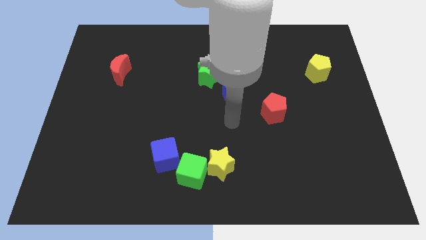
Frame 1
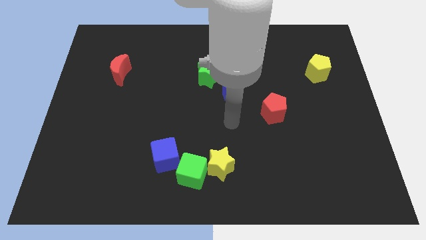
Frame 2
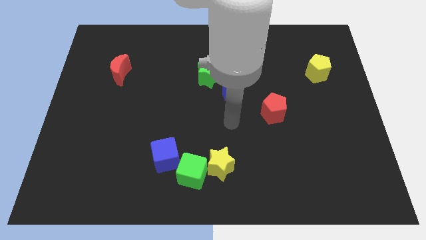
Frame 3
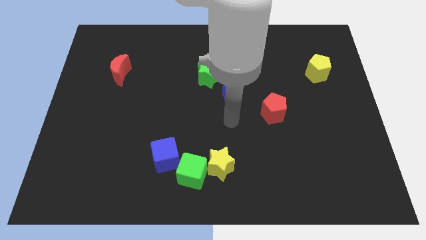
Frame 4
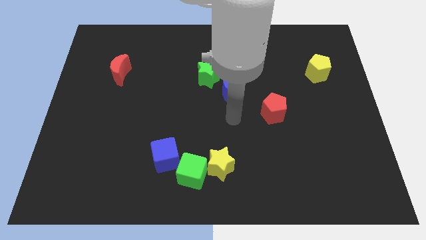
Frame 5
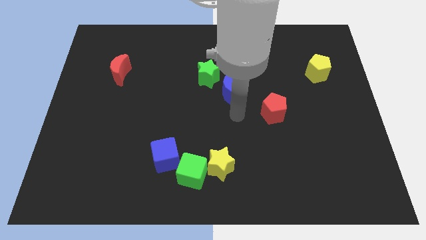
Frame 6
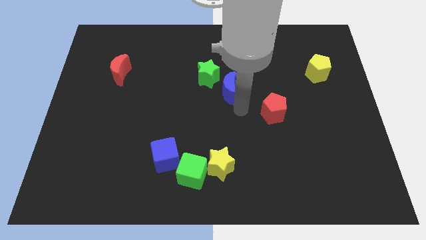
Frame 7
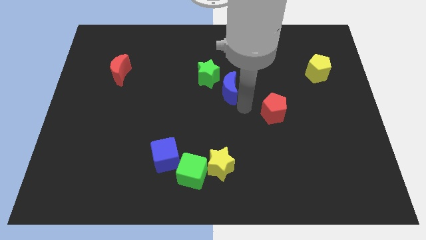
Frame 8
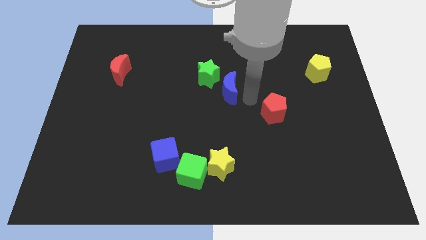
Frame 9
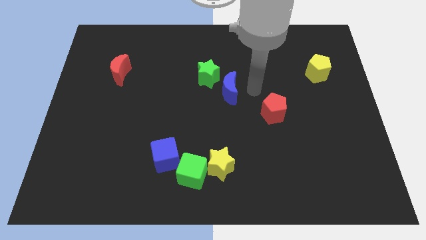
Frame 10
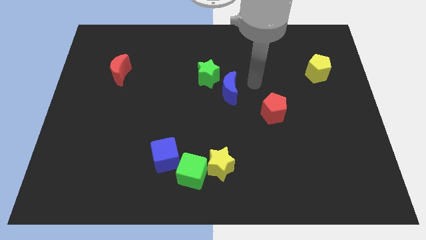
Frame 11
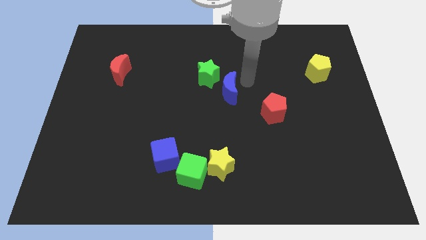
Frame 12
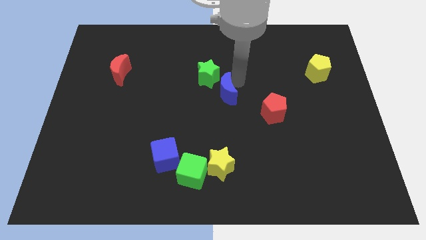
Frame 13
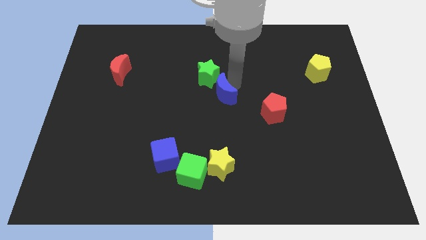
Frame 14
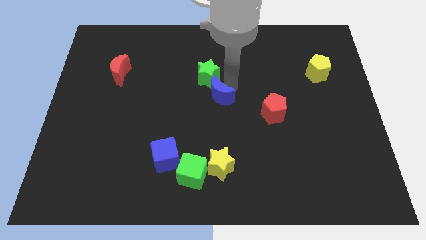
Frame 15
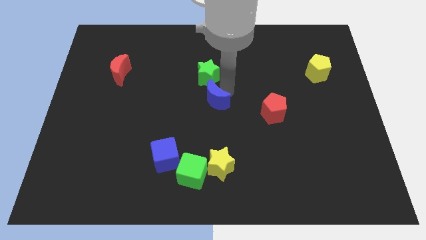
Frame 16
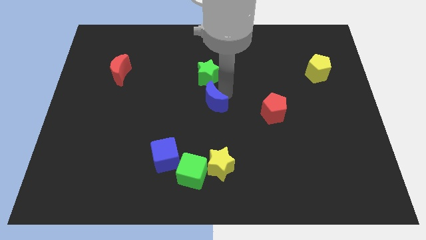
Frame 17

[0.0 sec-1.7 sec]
move your arm close to the blue moon

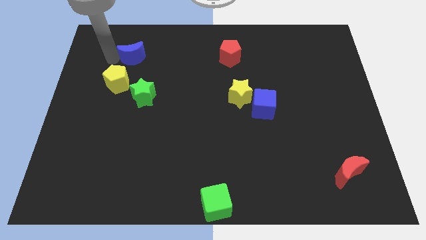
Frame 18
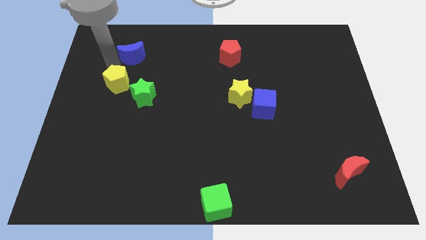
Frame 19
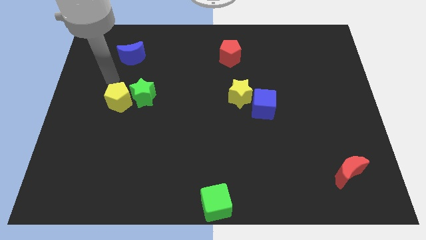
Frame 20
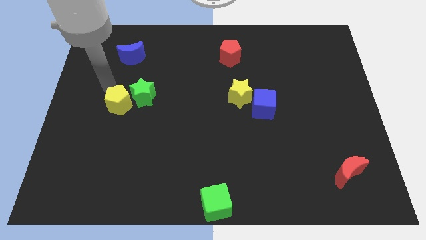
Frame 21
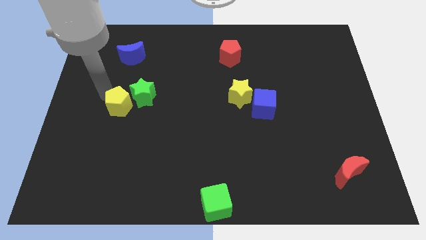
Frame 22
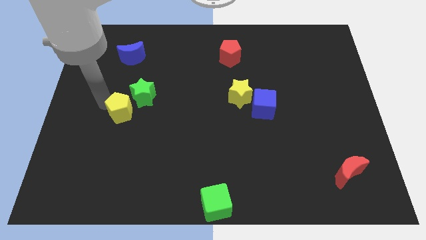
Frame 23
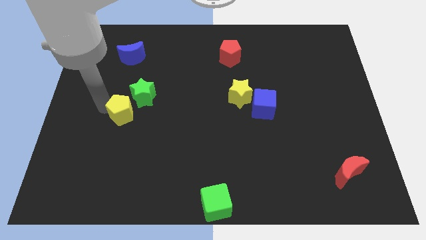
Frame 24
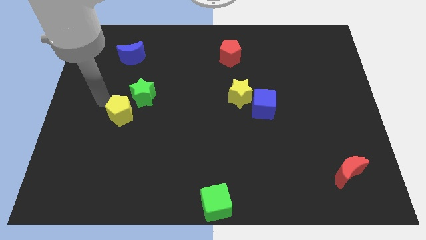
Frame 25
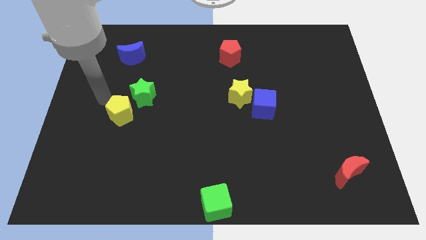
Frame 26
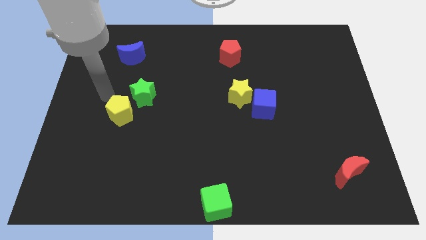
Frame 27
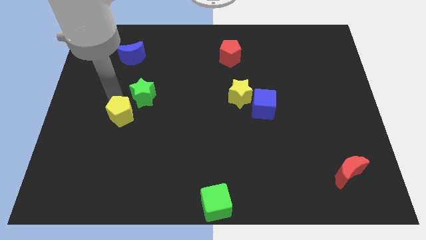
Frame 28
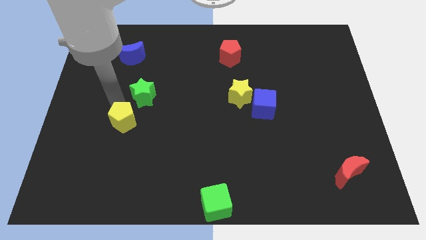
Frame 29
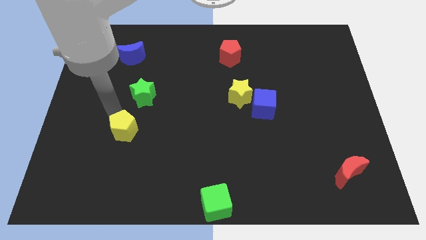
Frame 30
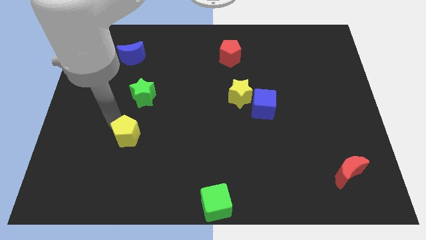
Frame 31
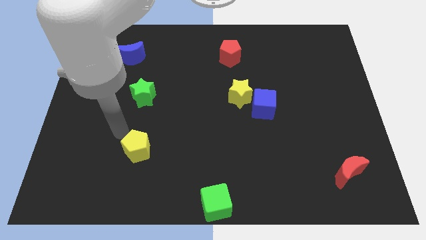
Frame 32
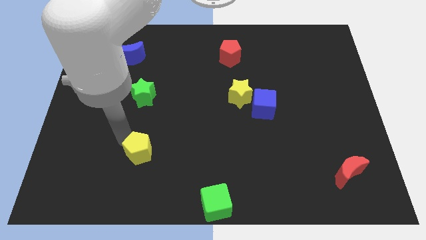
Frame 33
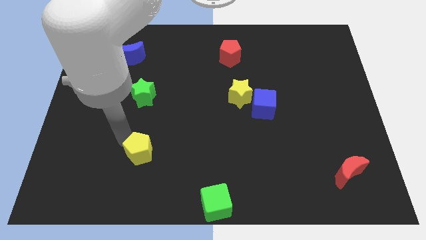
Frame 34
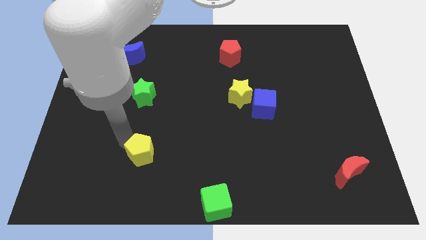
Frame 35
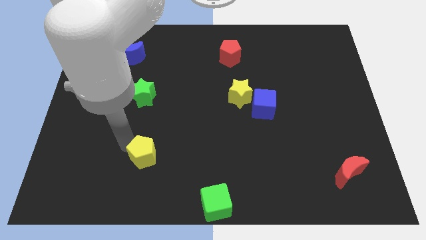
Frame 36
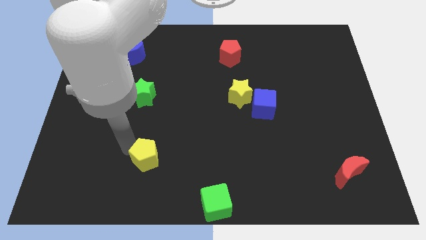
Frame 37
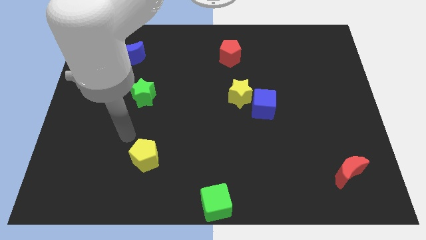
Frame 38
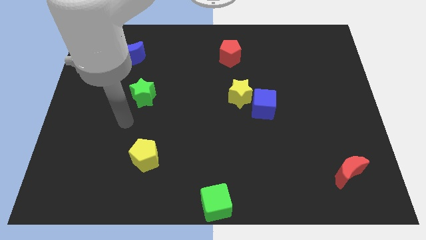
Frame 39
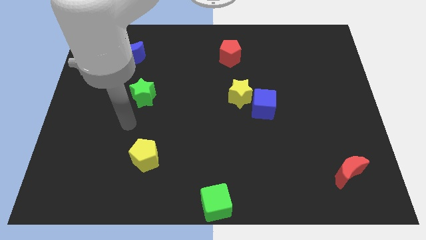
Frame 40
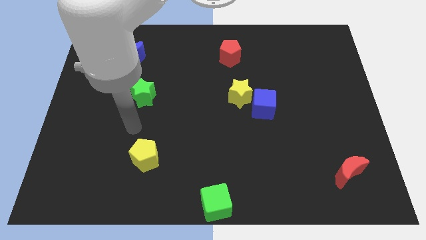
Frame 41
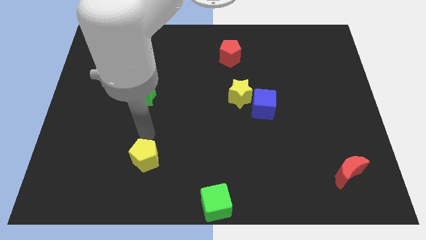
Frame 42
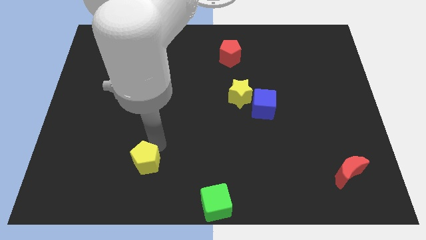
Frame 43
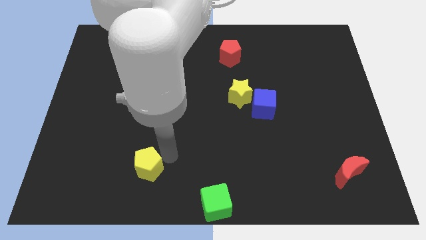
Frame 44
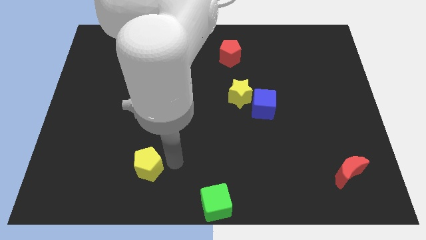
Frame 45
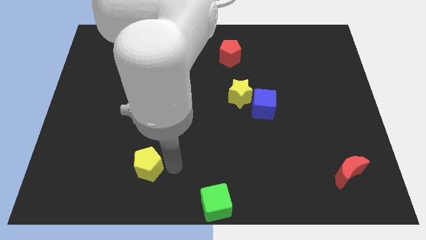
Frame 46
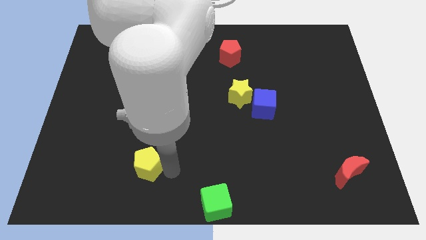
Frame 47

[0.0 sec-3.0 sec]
move the yellow pentagon to the bottom of the board

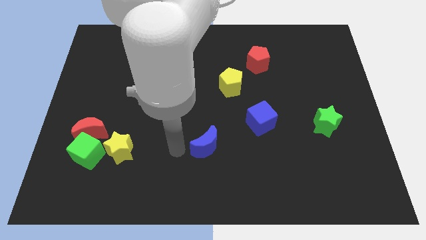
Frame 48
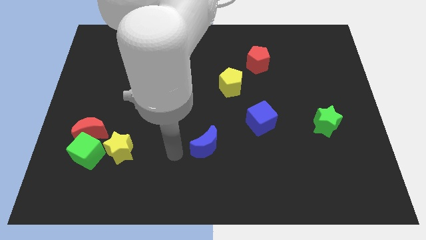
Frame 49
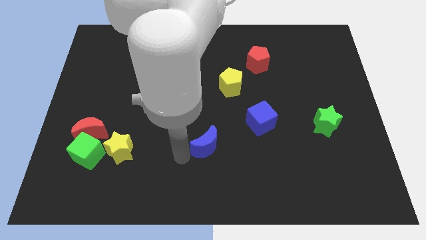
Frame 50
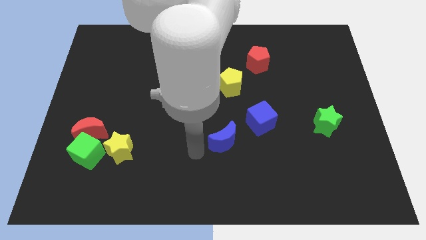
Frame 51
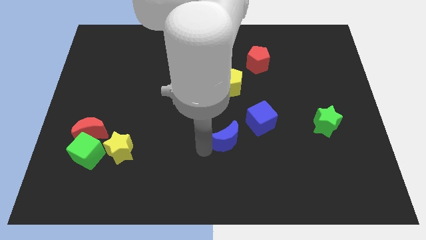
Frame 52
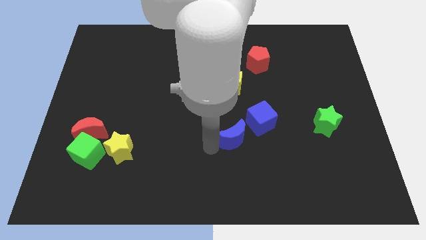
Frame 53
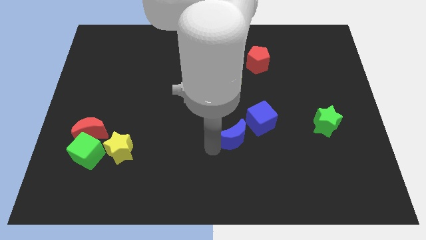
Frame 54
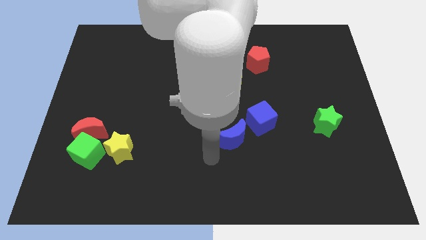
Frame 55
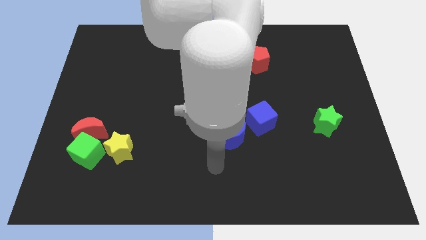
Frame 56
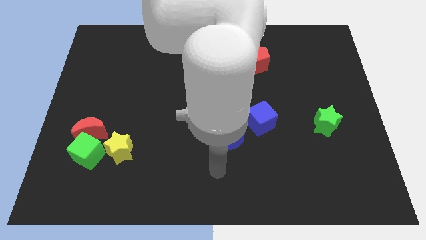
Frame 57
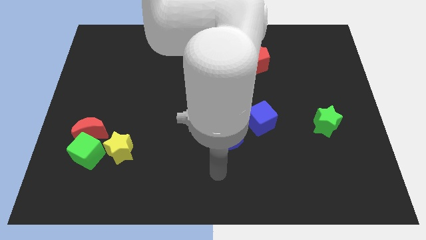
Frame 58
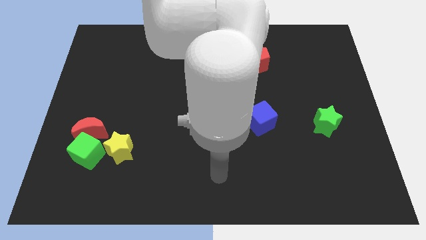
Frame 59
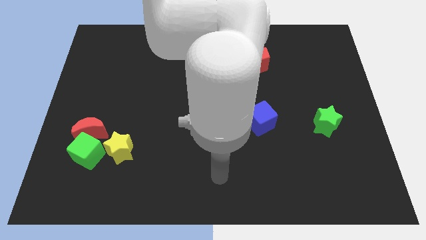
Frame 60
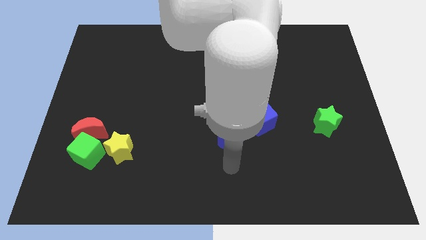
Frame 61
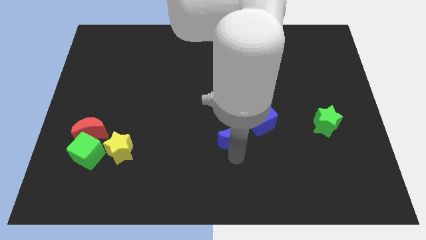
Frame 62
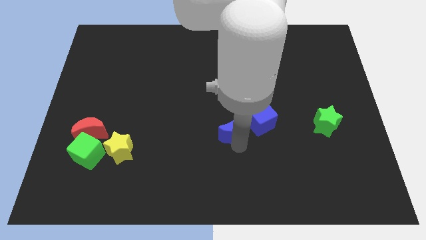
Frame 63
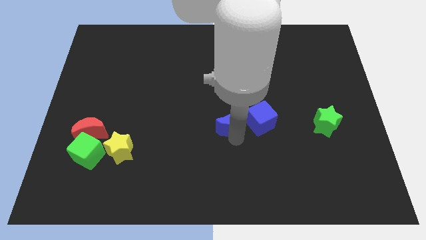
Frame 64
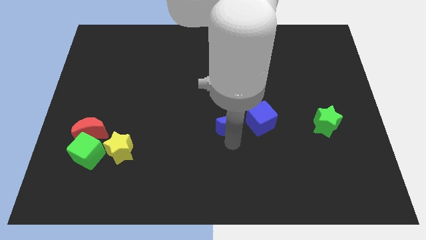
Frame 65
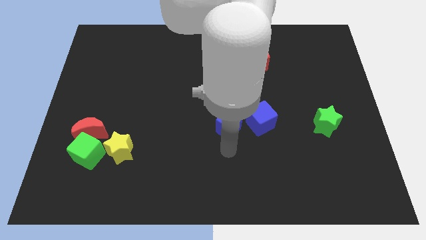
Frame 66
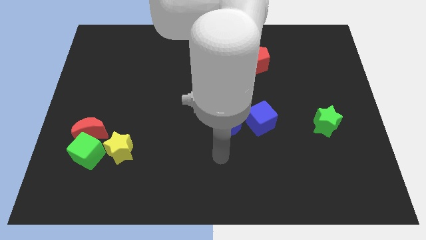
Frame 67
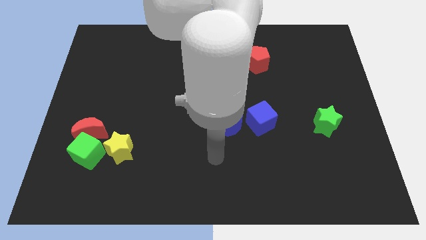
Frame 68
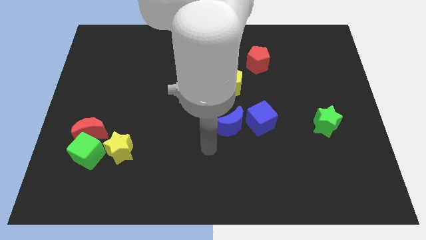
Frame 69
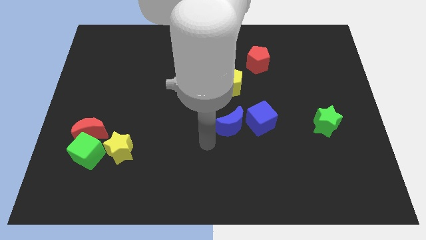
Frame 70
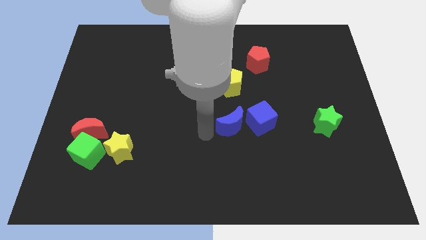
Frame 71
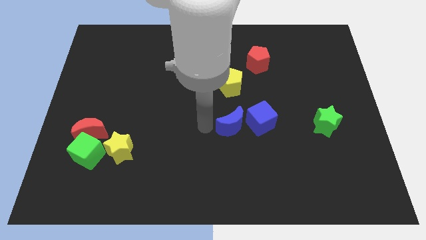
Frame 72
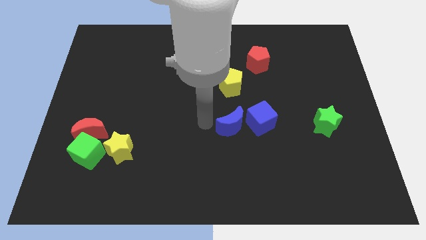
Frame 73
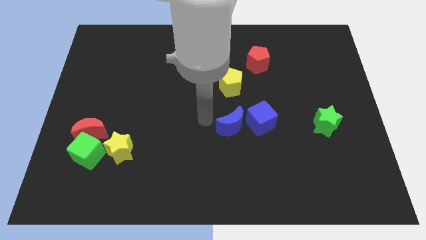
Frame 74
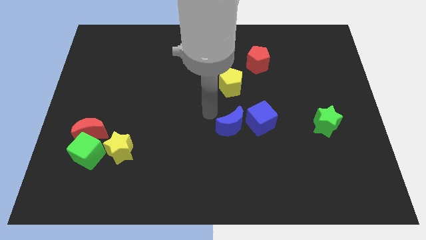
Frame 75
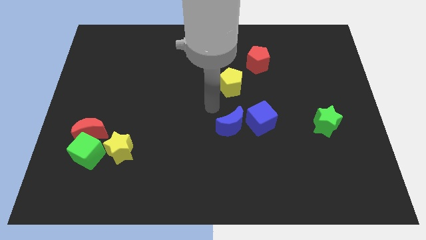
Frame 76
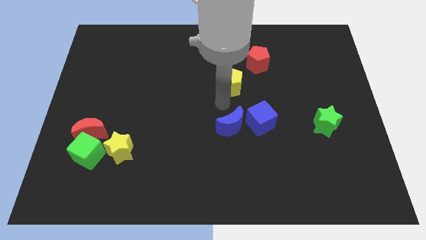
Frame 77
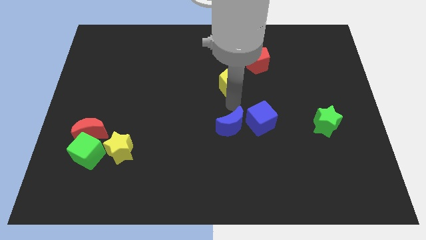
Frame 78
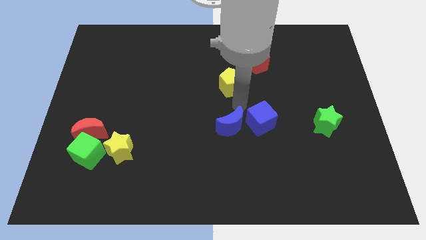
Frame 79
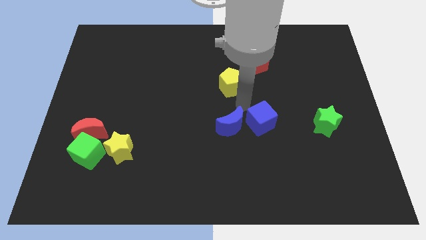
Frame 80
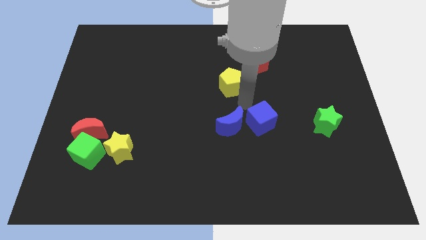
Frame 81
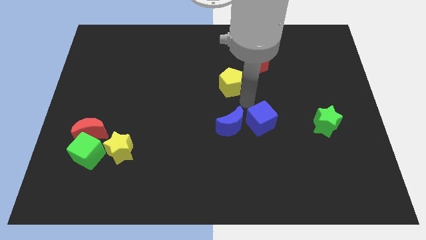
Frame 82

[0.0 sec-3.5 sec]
move the blue moon left to the blue cube

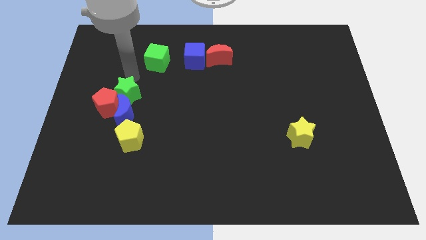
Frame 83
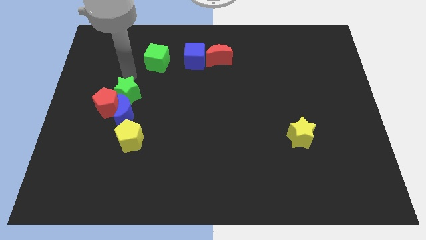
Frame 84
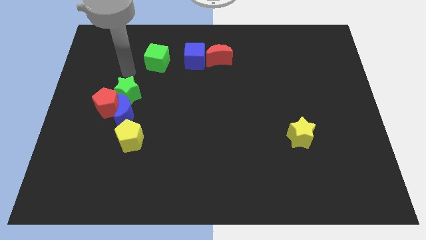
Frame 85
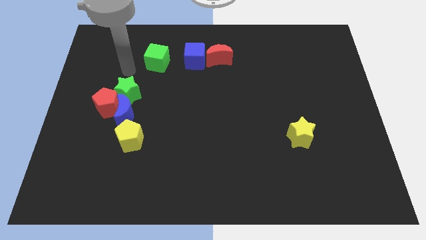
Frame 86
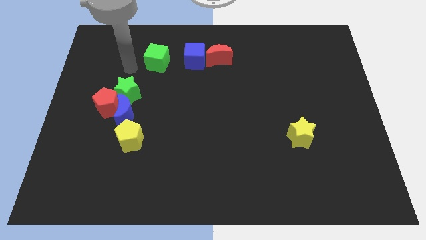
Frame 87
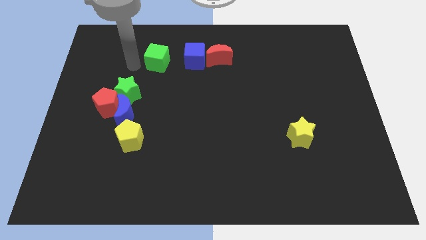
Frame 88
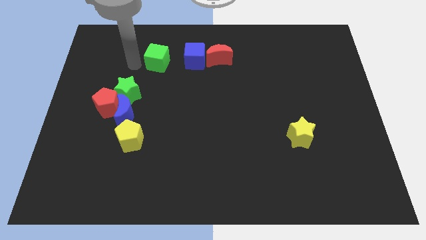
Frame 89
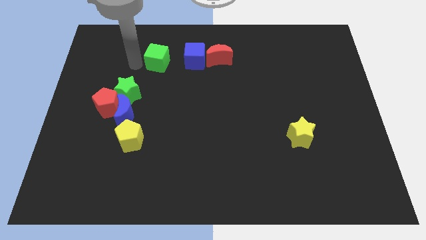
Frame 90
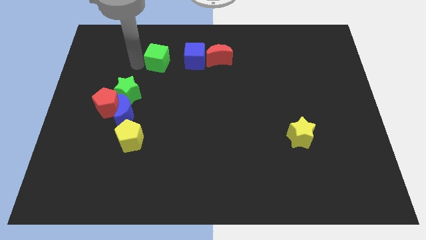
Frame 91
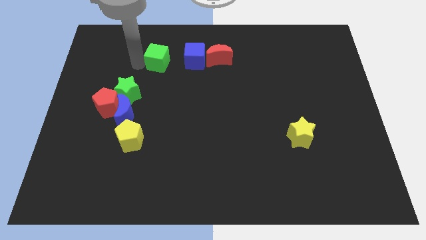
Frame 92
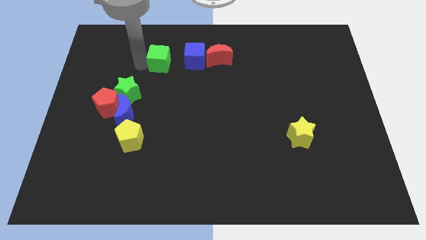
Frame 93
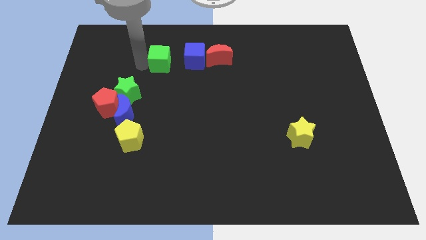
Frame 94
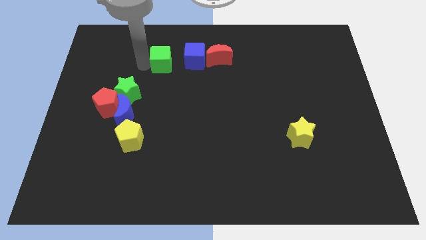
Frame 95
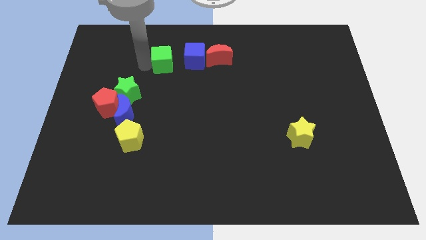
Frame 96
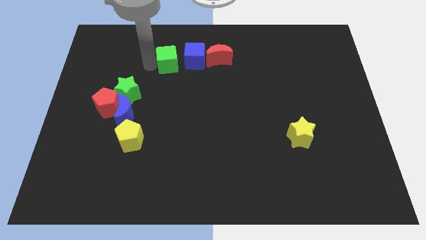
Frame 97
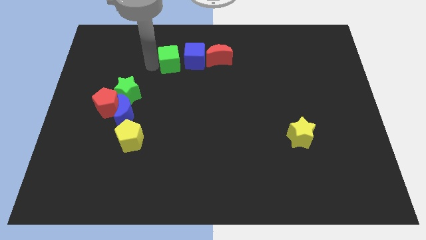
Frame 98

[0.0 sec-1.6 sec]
push the green cube to the left of the blue cube
